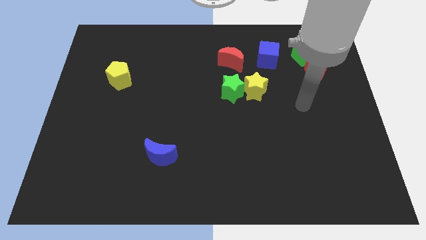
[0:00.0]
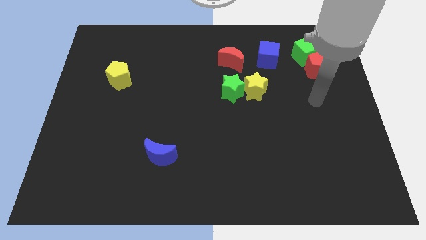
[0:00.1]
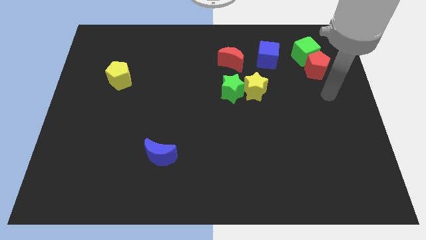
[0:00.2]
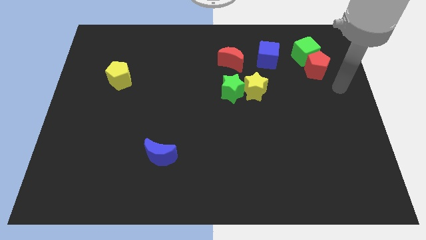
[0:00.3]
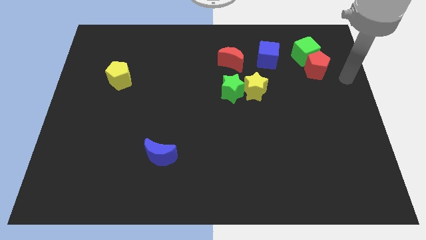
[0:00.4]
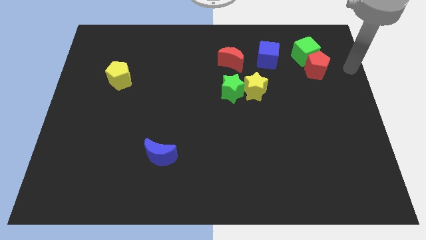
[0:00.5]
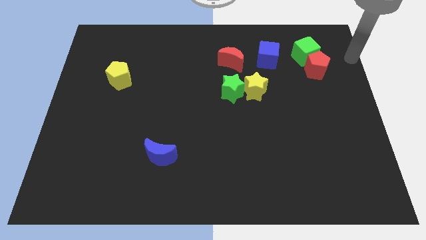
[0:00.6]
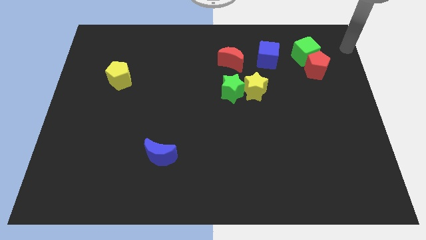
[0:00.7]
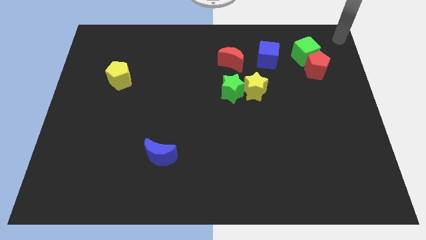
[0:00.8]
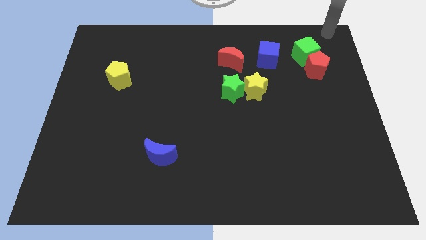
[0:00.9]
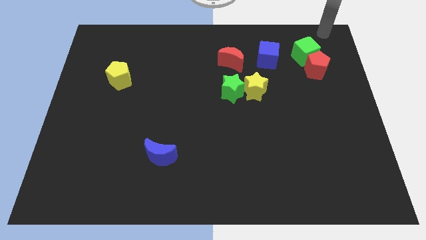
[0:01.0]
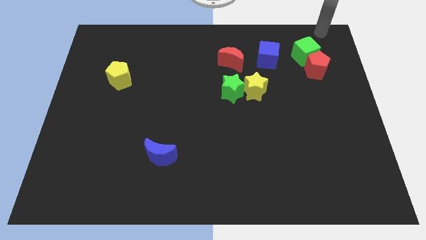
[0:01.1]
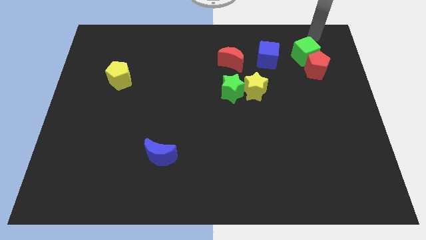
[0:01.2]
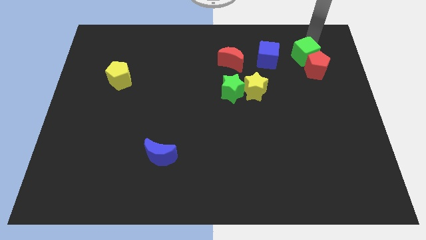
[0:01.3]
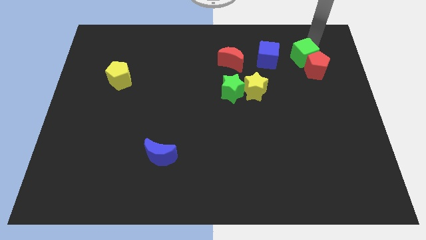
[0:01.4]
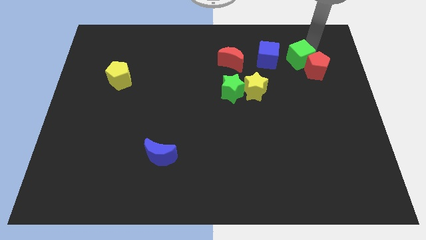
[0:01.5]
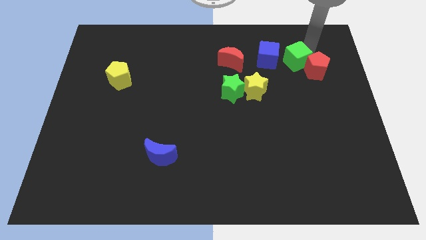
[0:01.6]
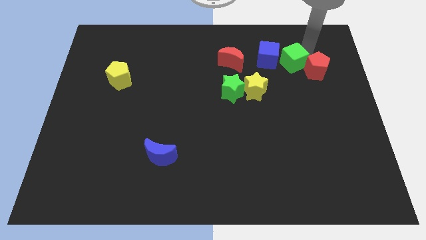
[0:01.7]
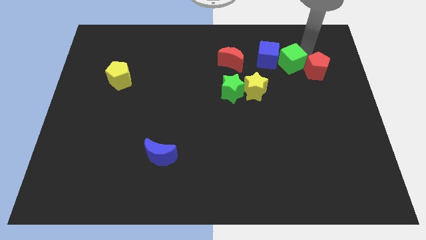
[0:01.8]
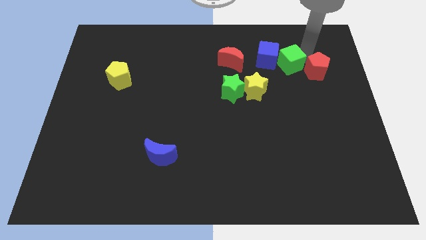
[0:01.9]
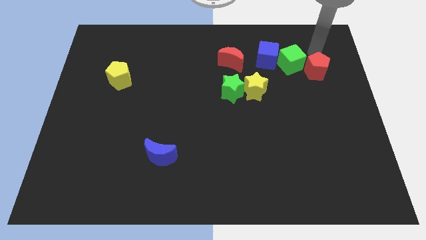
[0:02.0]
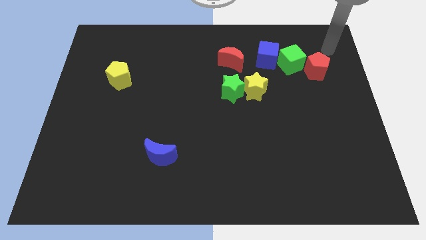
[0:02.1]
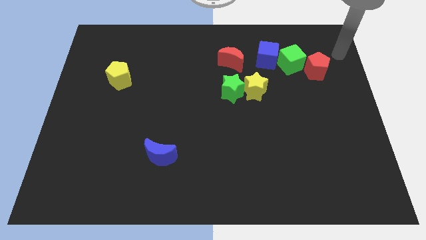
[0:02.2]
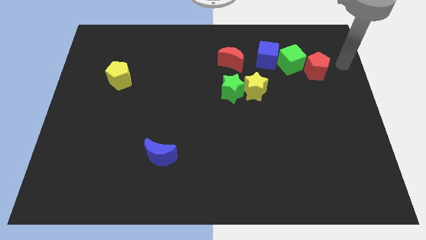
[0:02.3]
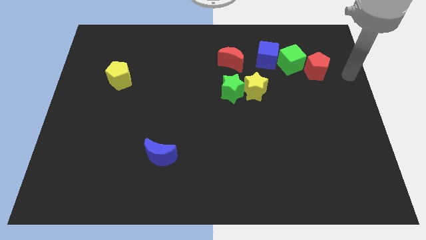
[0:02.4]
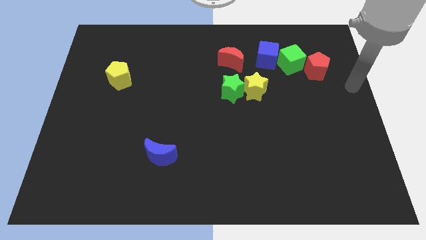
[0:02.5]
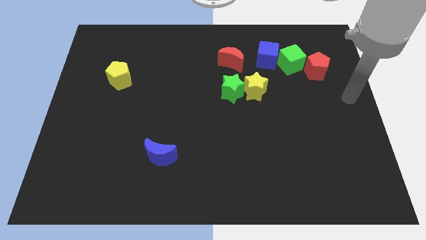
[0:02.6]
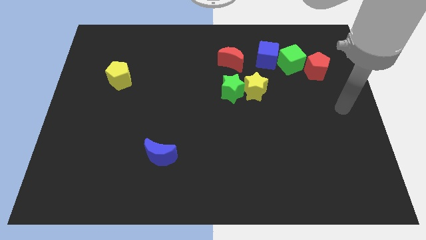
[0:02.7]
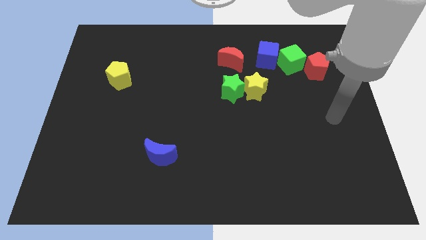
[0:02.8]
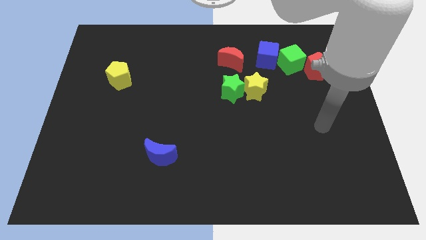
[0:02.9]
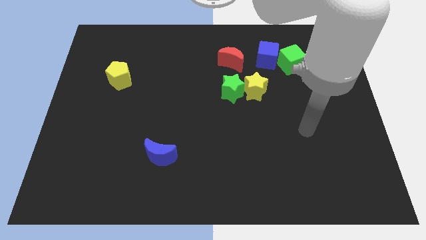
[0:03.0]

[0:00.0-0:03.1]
slide the green cube in between the red pentagon and blue cube

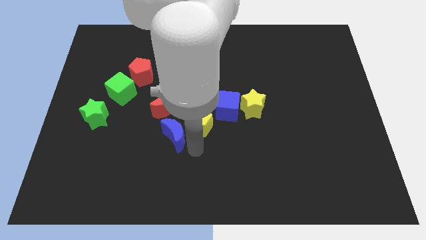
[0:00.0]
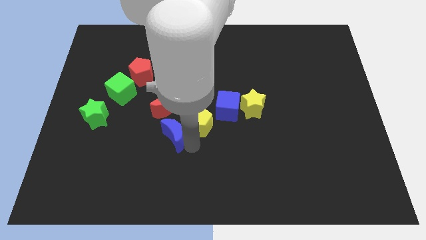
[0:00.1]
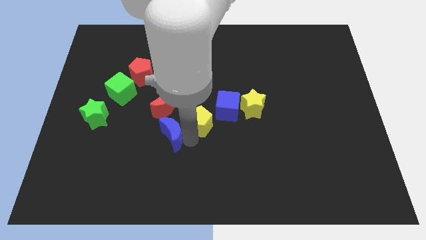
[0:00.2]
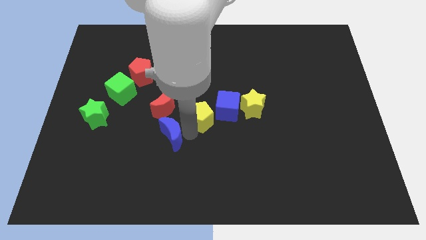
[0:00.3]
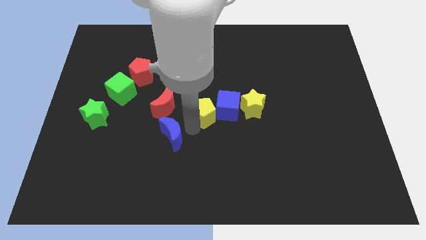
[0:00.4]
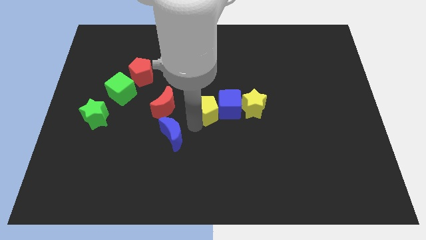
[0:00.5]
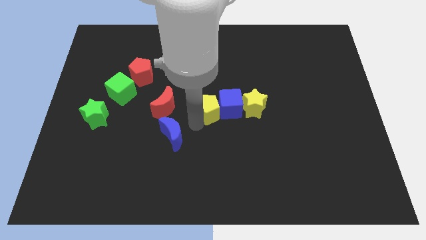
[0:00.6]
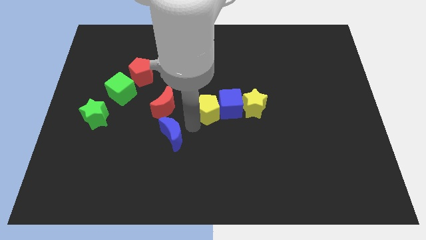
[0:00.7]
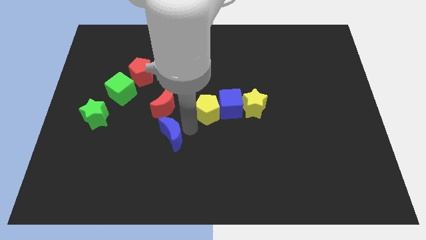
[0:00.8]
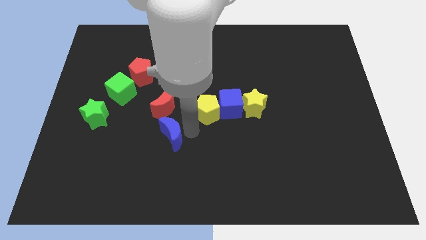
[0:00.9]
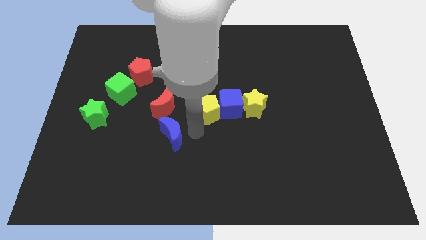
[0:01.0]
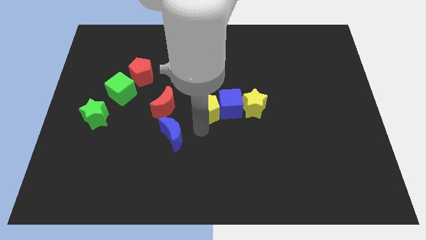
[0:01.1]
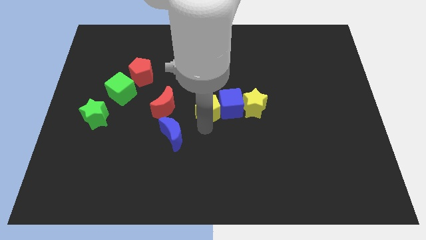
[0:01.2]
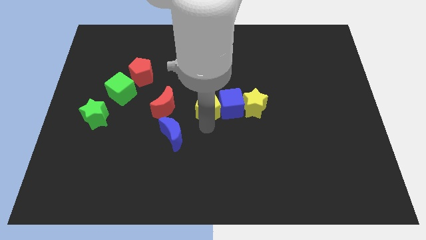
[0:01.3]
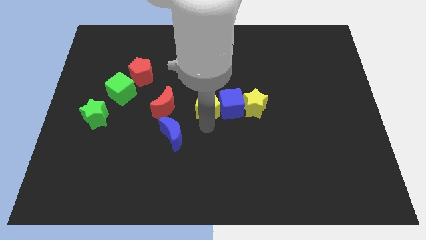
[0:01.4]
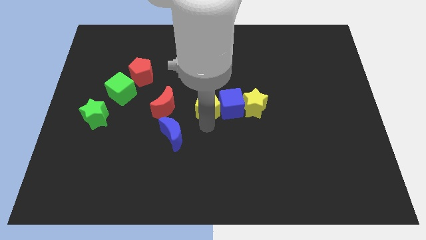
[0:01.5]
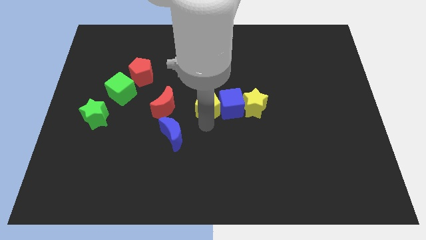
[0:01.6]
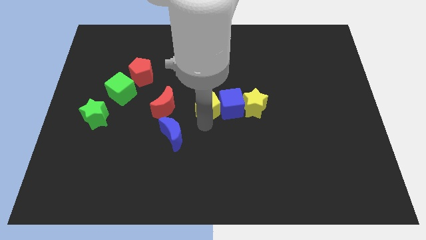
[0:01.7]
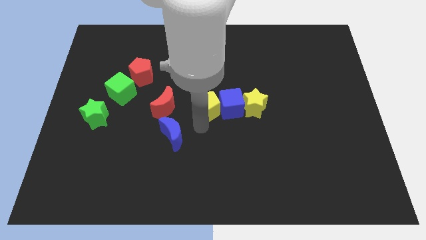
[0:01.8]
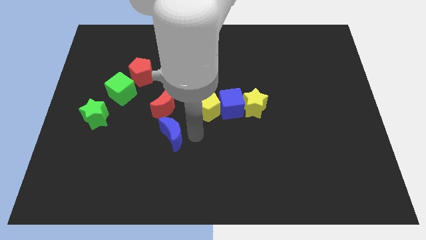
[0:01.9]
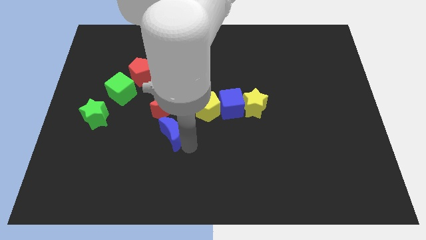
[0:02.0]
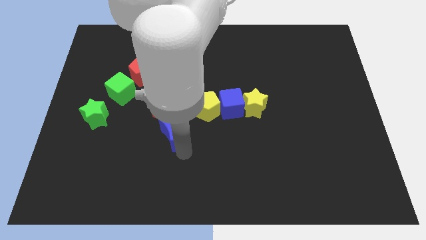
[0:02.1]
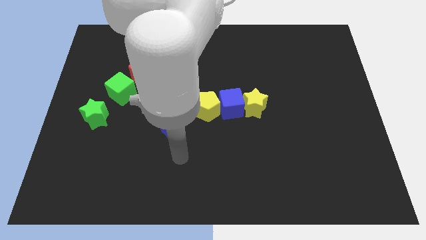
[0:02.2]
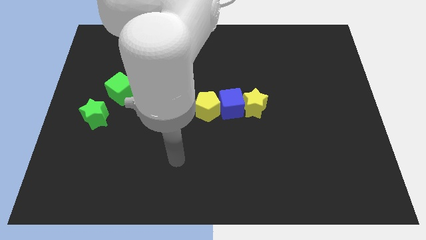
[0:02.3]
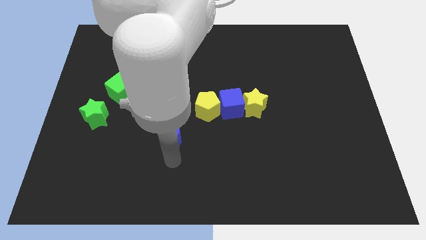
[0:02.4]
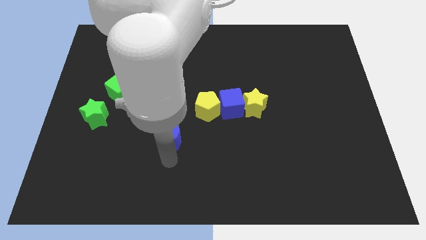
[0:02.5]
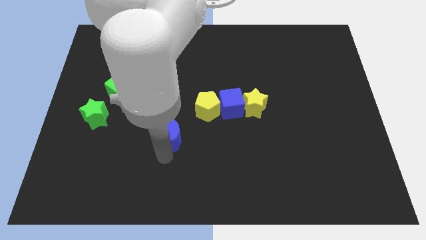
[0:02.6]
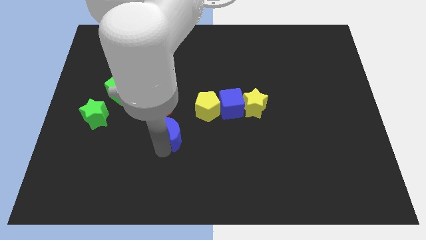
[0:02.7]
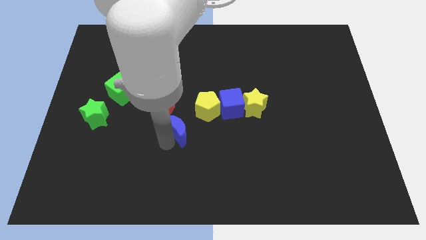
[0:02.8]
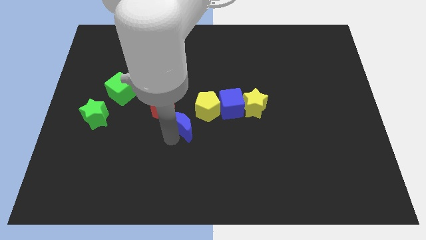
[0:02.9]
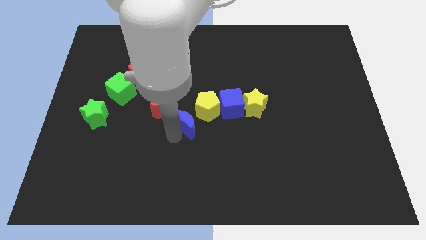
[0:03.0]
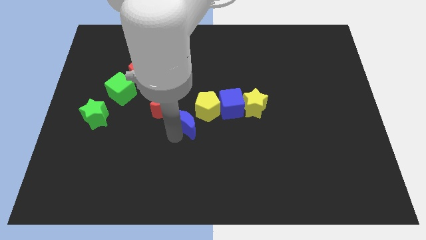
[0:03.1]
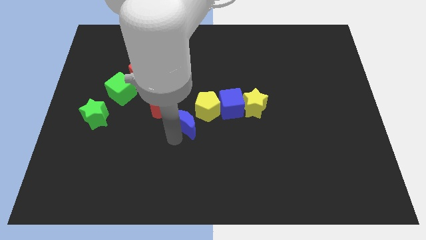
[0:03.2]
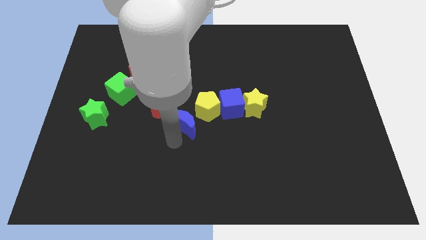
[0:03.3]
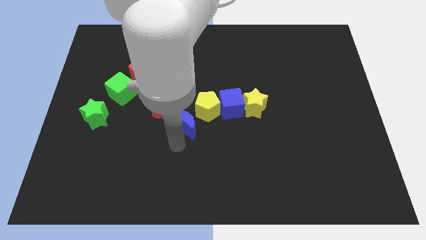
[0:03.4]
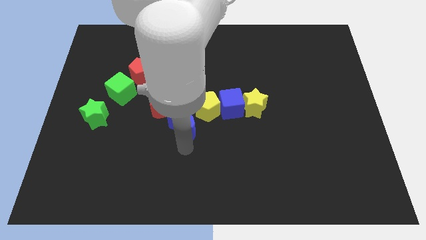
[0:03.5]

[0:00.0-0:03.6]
place yellow pentagon left of blue cube

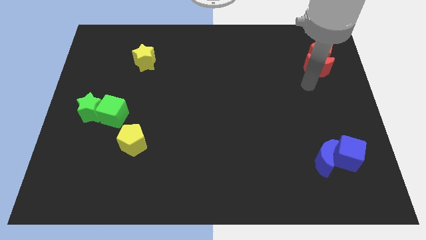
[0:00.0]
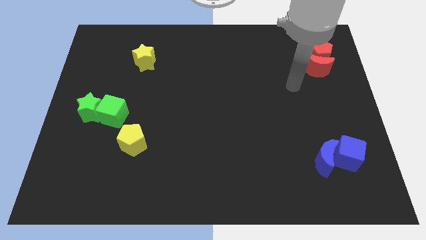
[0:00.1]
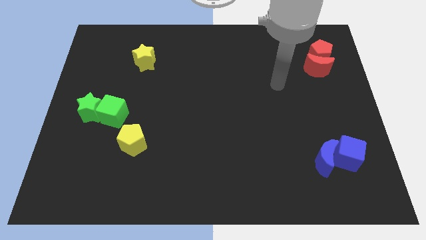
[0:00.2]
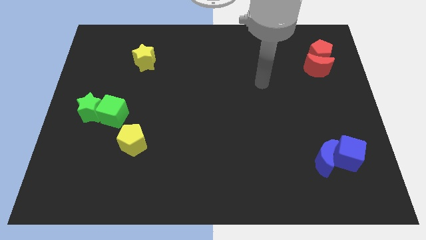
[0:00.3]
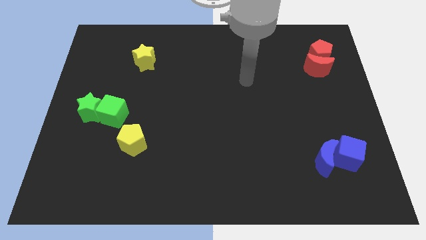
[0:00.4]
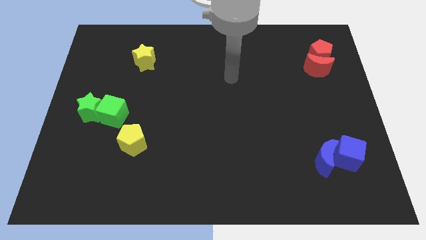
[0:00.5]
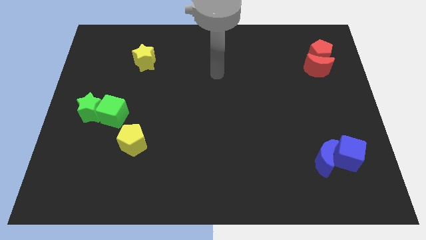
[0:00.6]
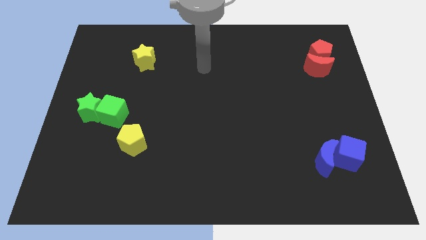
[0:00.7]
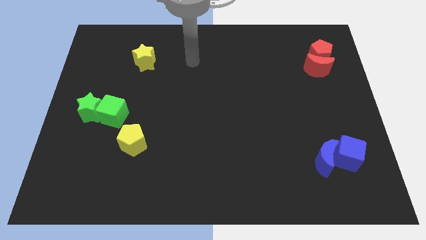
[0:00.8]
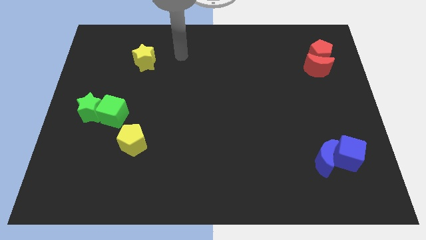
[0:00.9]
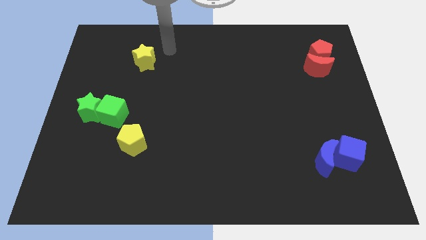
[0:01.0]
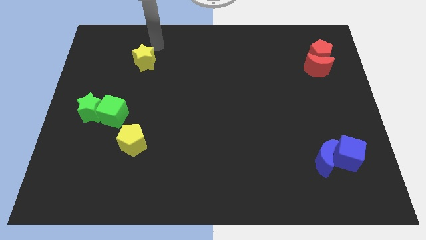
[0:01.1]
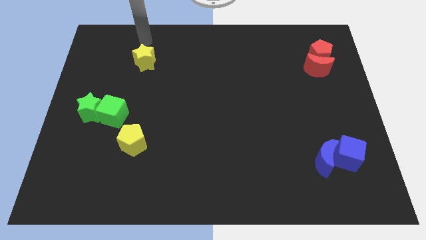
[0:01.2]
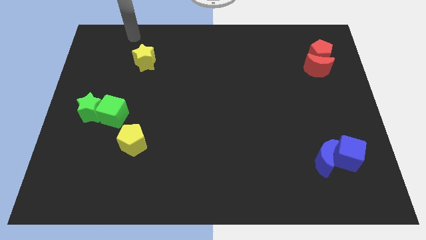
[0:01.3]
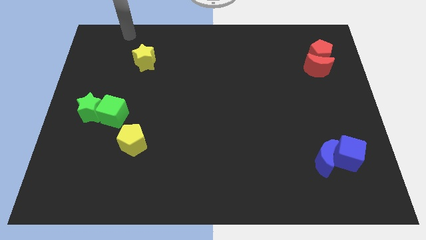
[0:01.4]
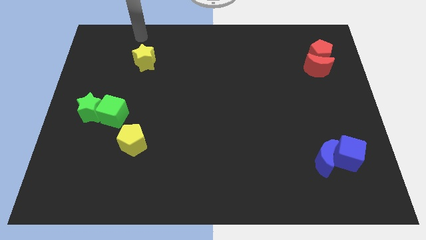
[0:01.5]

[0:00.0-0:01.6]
place your arm at the top of the yellow star

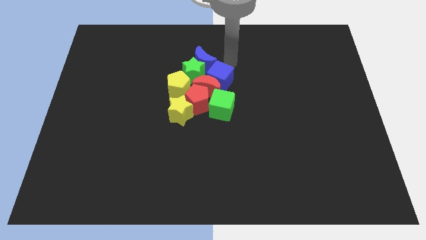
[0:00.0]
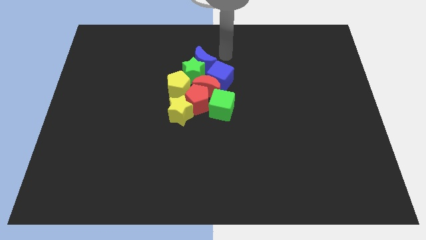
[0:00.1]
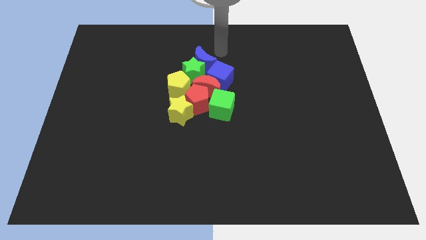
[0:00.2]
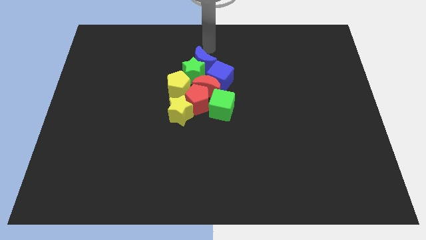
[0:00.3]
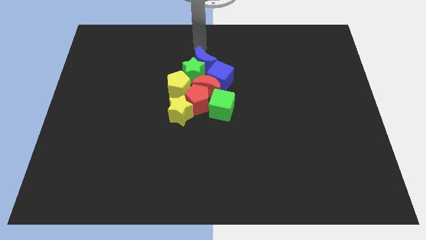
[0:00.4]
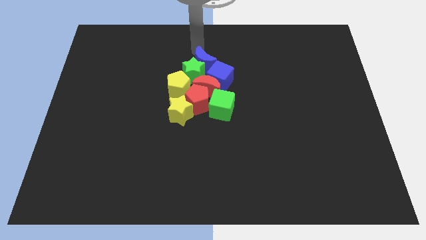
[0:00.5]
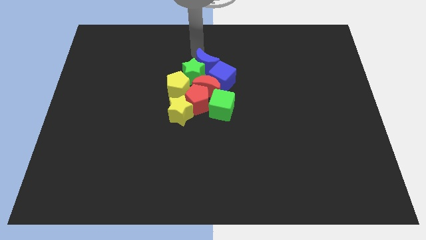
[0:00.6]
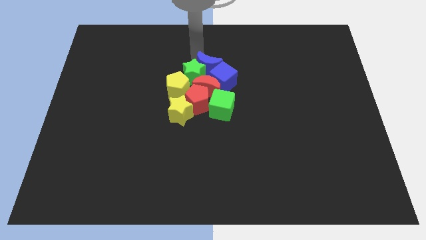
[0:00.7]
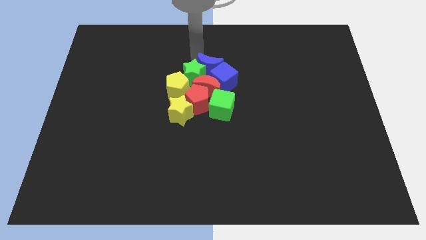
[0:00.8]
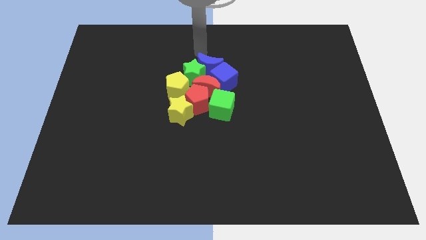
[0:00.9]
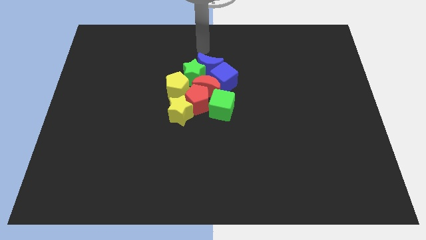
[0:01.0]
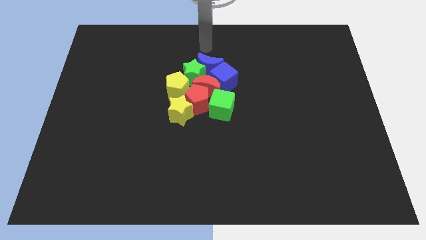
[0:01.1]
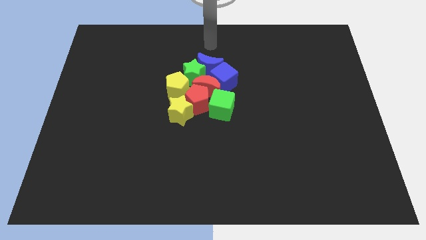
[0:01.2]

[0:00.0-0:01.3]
move the blue crescent into the blue cube
